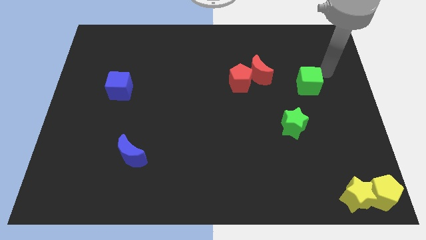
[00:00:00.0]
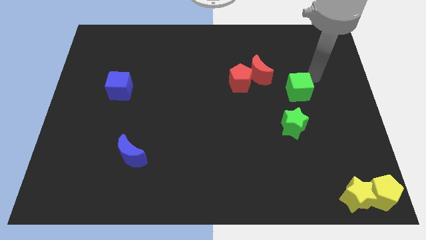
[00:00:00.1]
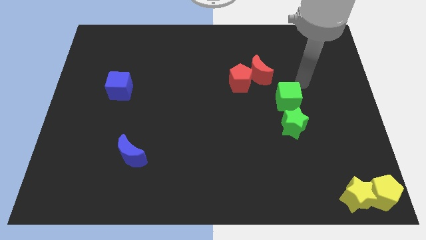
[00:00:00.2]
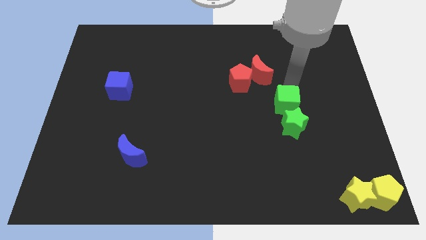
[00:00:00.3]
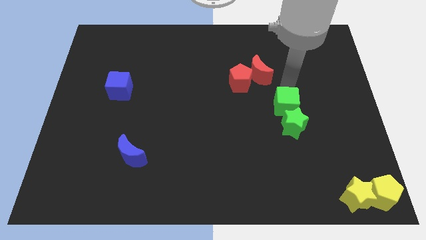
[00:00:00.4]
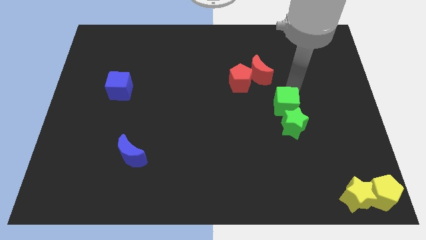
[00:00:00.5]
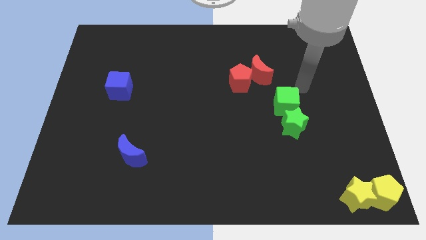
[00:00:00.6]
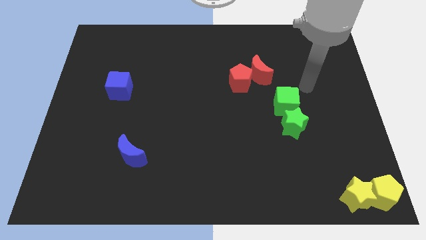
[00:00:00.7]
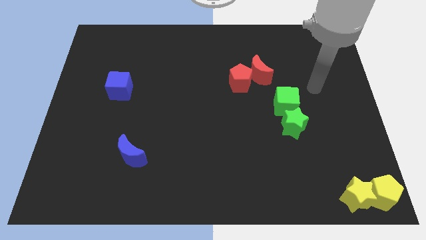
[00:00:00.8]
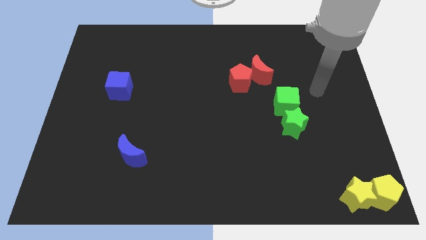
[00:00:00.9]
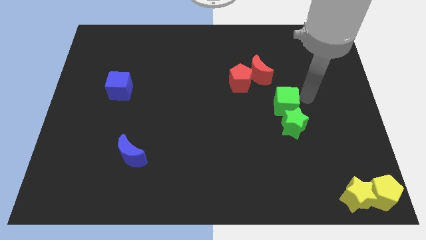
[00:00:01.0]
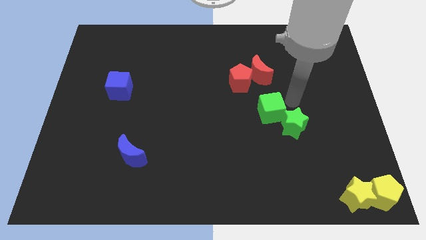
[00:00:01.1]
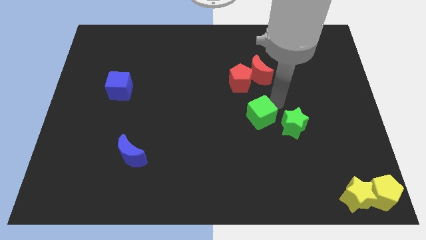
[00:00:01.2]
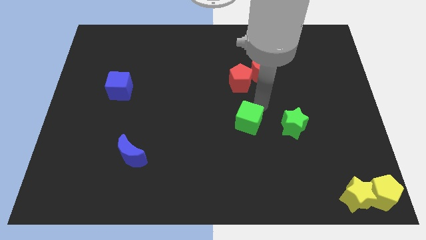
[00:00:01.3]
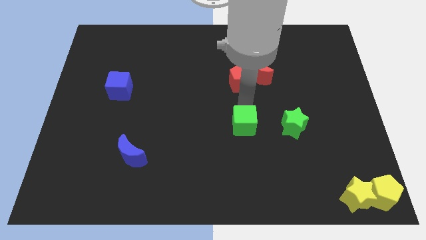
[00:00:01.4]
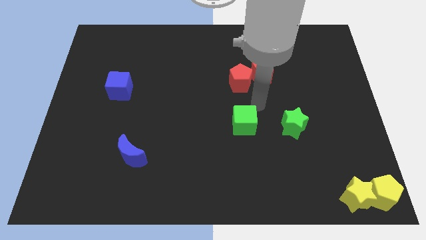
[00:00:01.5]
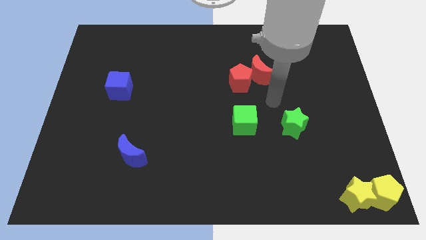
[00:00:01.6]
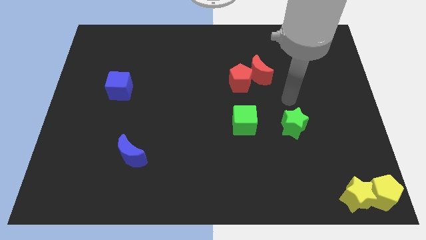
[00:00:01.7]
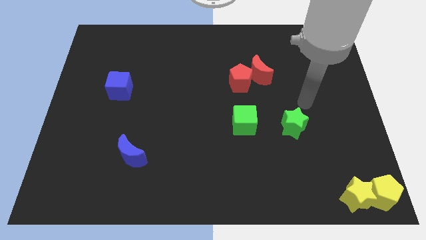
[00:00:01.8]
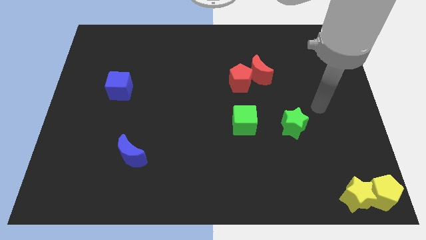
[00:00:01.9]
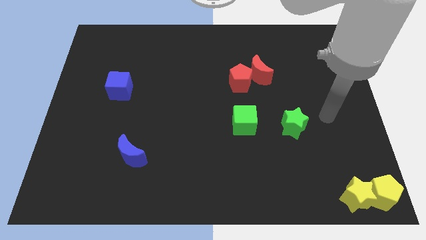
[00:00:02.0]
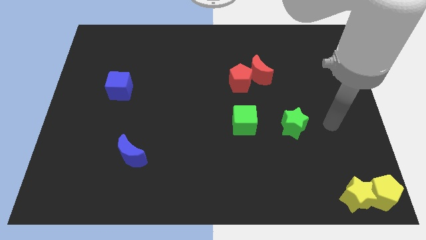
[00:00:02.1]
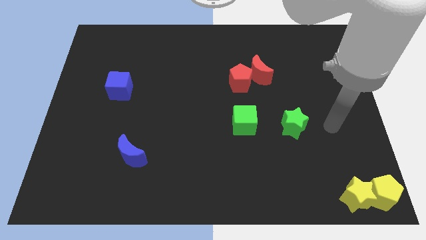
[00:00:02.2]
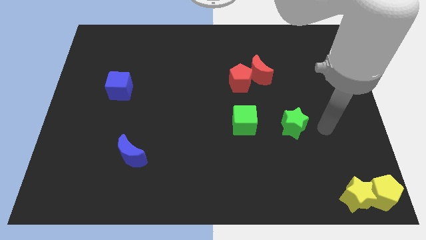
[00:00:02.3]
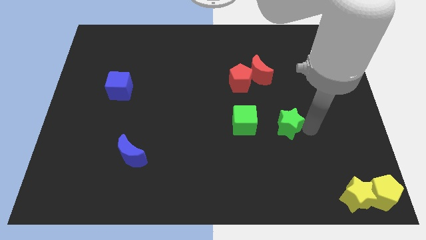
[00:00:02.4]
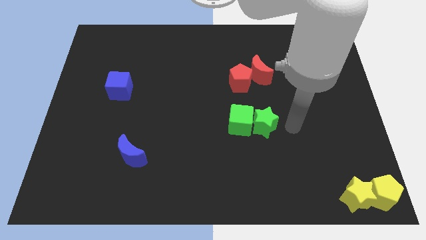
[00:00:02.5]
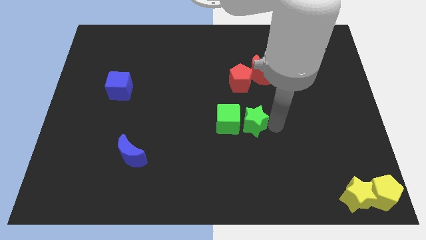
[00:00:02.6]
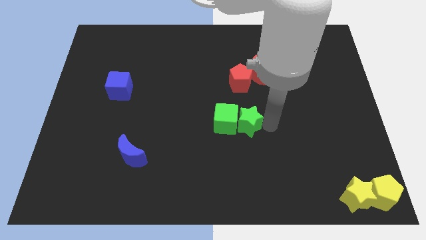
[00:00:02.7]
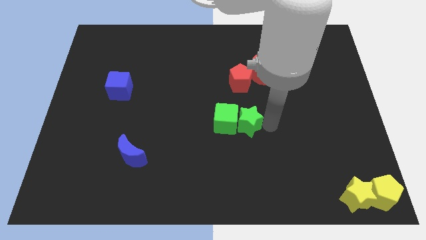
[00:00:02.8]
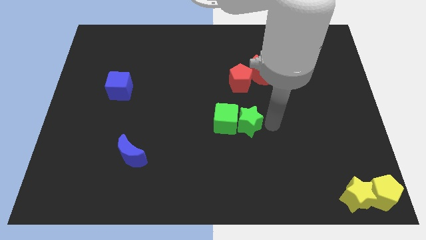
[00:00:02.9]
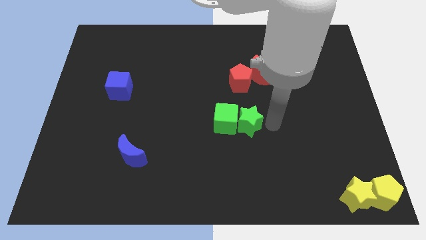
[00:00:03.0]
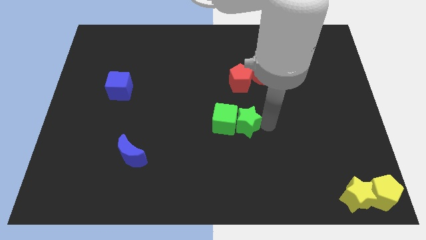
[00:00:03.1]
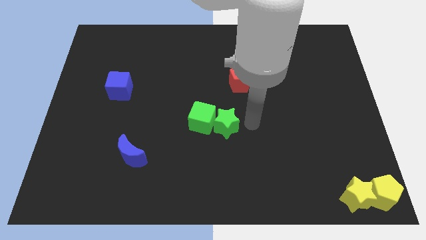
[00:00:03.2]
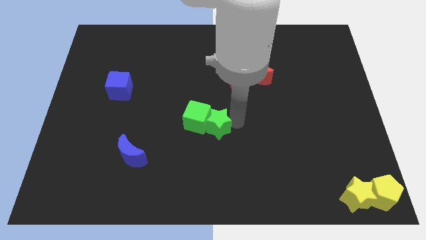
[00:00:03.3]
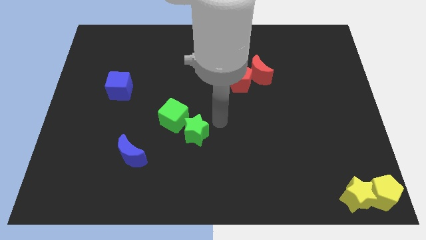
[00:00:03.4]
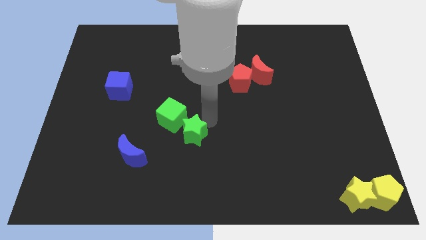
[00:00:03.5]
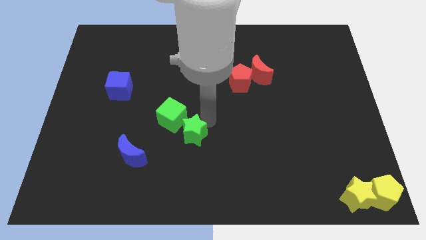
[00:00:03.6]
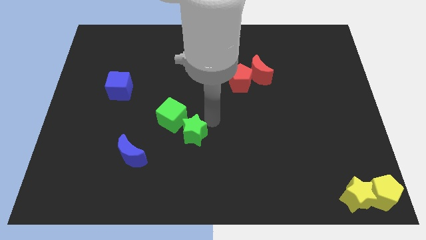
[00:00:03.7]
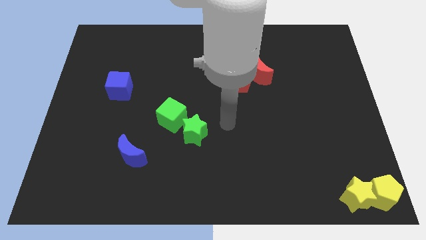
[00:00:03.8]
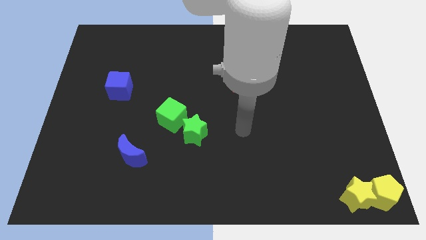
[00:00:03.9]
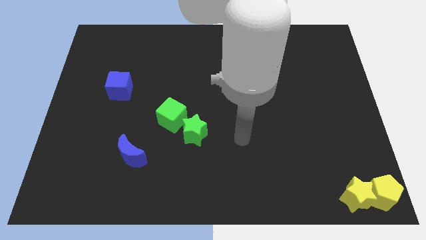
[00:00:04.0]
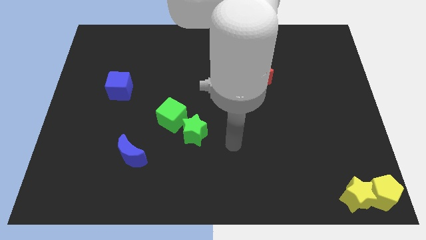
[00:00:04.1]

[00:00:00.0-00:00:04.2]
move the green cube into the green star

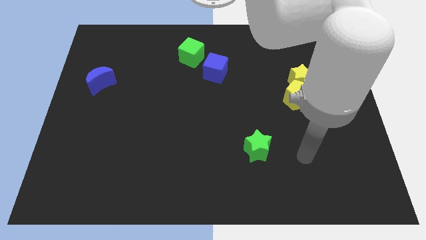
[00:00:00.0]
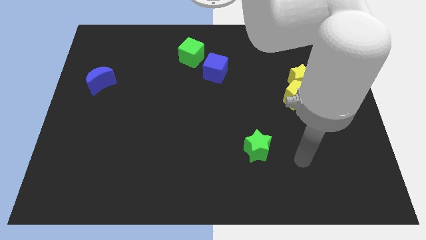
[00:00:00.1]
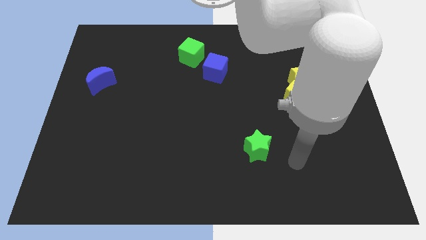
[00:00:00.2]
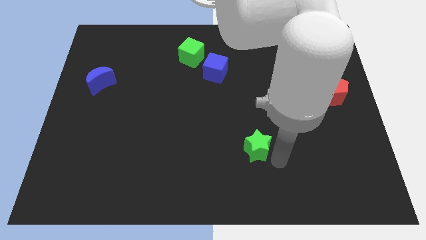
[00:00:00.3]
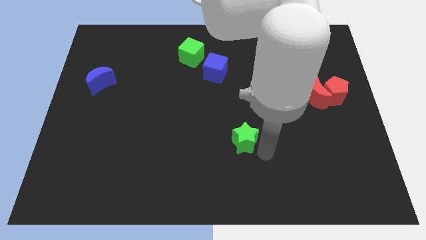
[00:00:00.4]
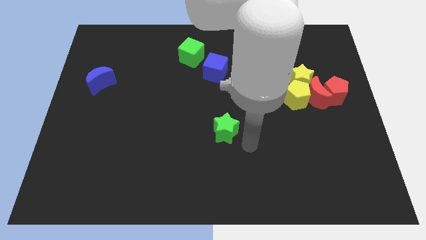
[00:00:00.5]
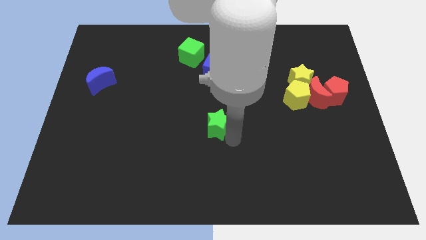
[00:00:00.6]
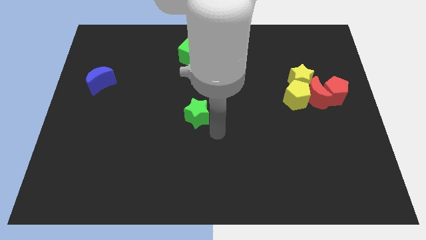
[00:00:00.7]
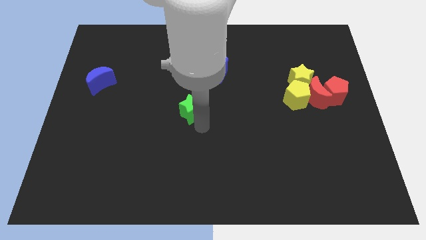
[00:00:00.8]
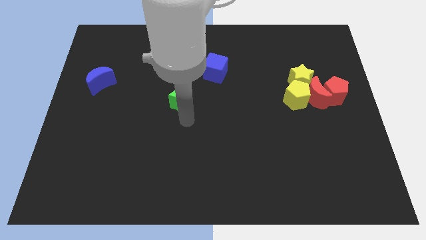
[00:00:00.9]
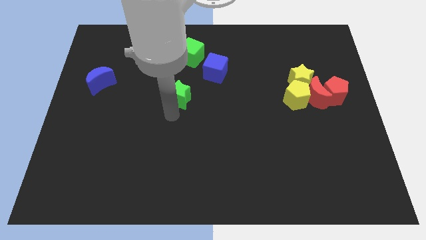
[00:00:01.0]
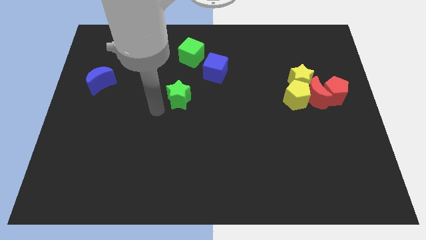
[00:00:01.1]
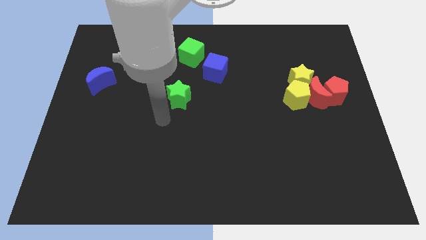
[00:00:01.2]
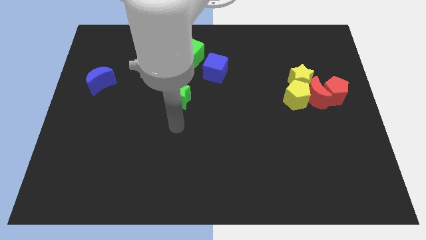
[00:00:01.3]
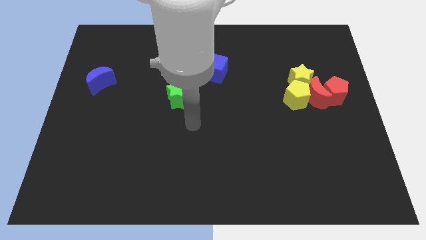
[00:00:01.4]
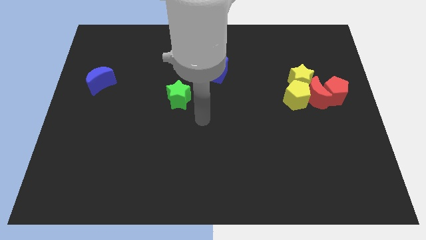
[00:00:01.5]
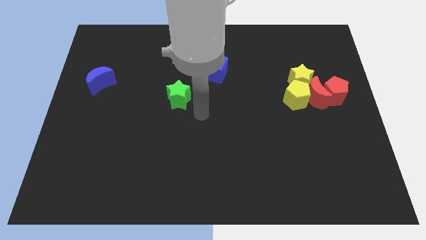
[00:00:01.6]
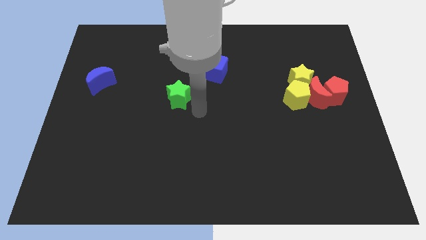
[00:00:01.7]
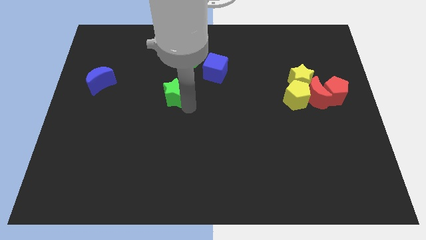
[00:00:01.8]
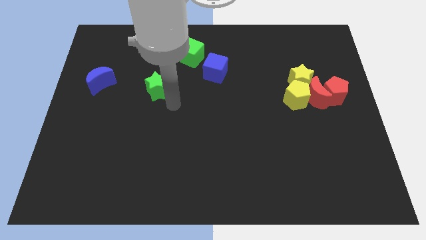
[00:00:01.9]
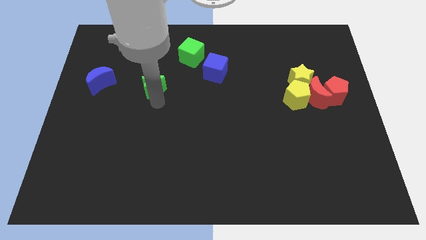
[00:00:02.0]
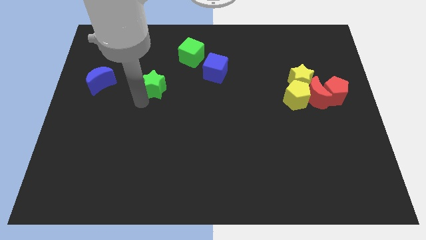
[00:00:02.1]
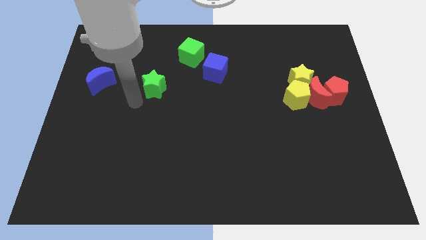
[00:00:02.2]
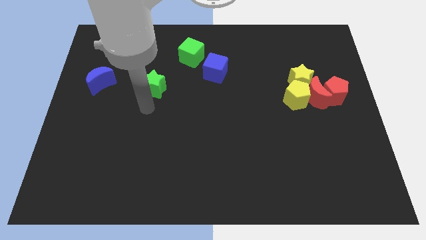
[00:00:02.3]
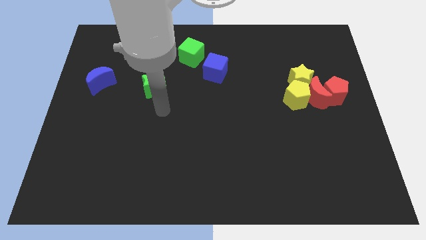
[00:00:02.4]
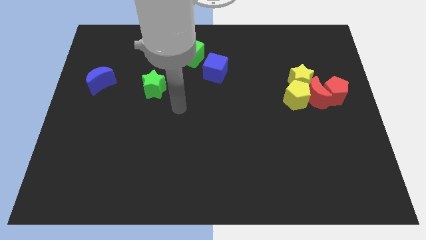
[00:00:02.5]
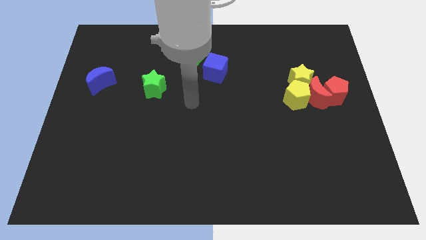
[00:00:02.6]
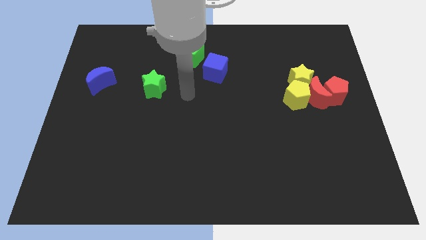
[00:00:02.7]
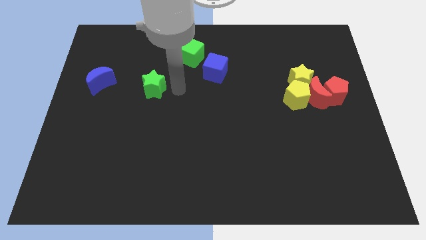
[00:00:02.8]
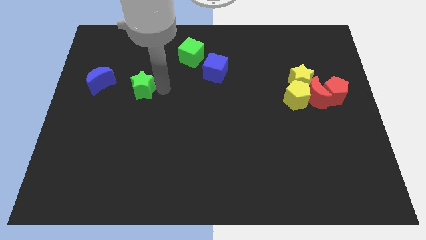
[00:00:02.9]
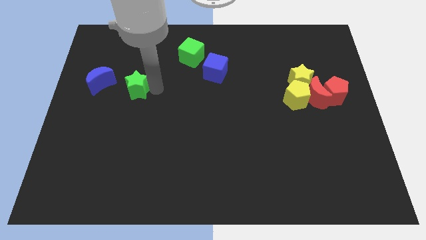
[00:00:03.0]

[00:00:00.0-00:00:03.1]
push green star beside blue crescent

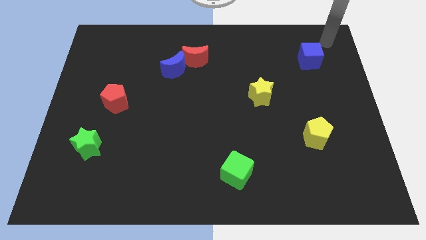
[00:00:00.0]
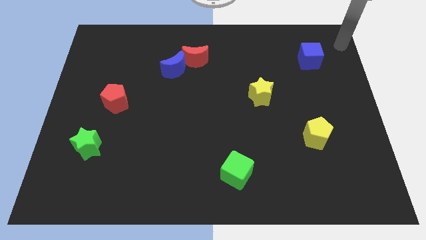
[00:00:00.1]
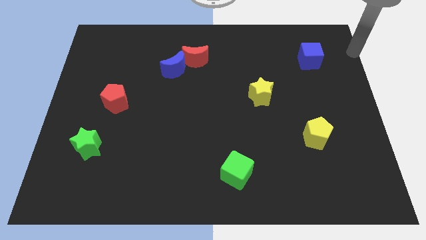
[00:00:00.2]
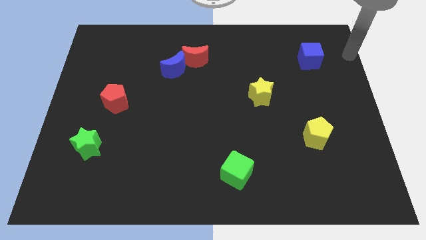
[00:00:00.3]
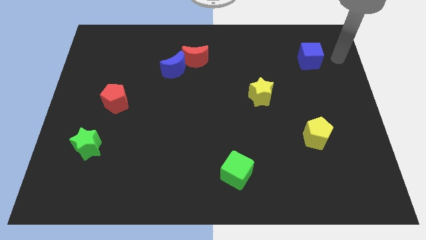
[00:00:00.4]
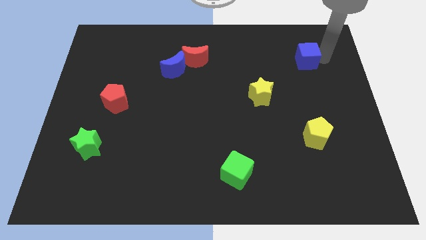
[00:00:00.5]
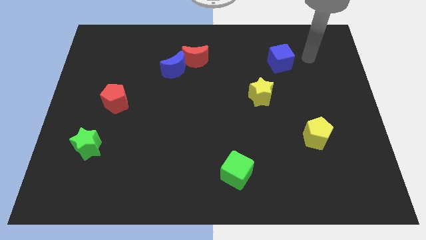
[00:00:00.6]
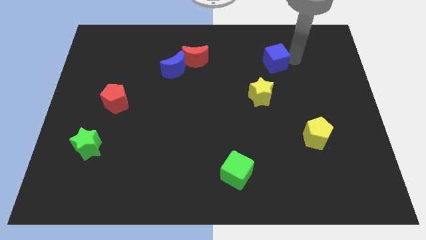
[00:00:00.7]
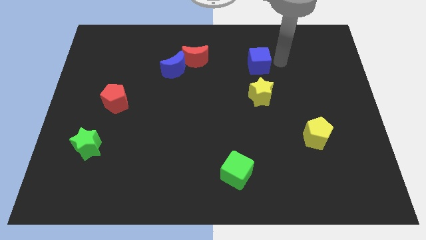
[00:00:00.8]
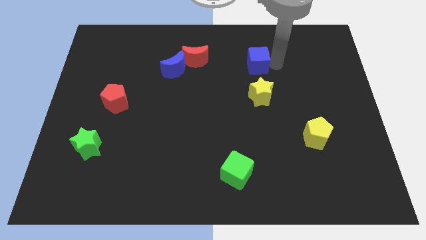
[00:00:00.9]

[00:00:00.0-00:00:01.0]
move the blue cube to the top of the yellow star

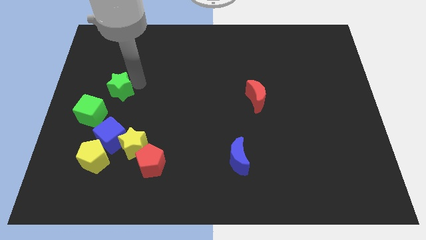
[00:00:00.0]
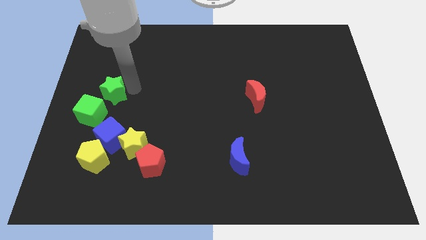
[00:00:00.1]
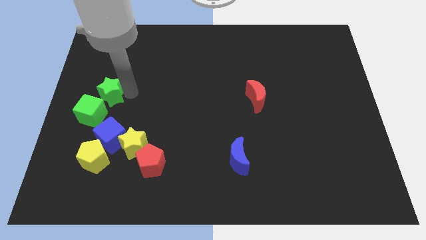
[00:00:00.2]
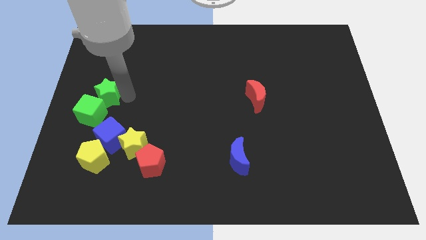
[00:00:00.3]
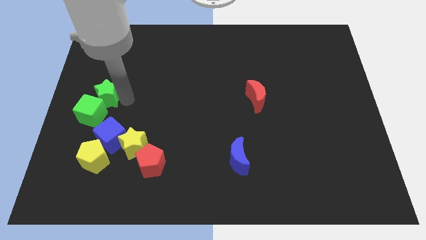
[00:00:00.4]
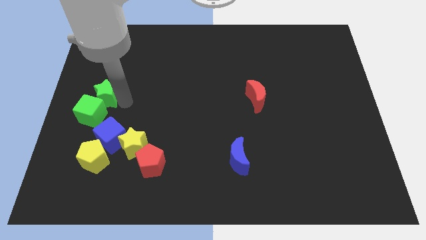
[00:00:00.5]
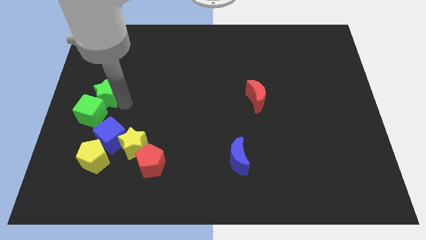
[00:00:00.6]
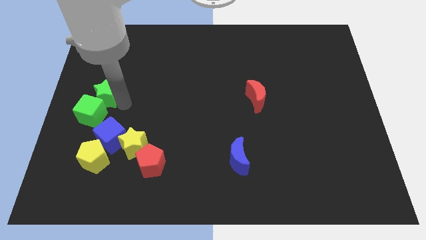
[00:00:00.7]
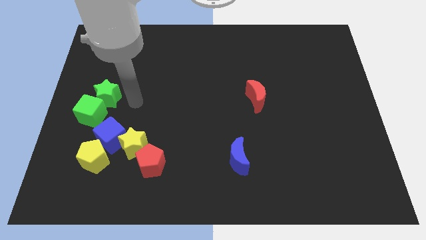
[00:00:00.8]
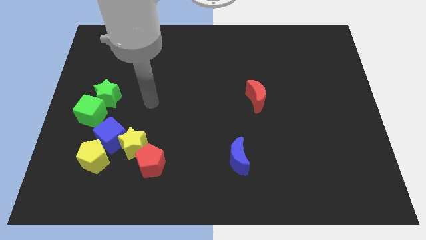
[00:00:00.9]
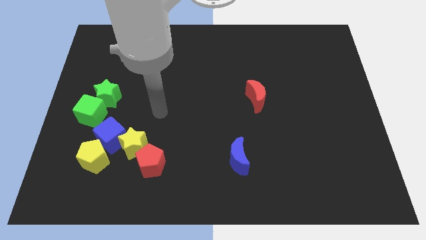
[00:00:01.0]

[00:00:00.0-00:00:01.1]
move the green star close to the green cube
